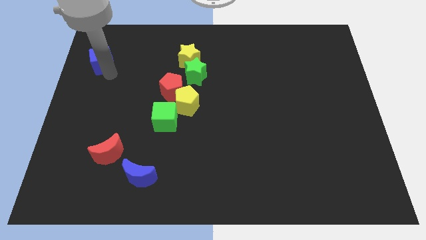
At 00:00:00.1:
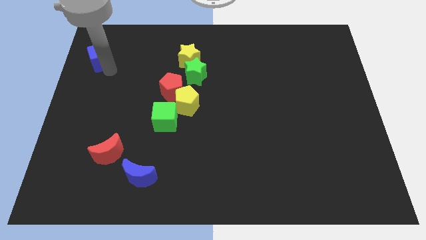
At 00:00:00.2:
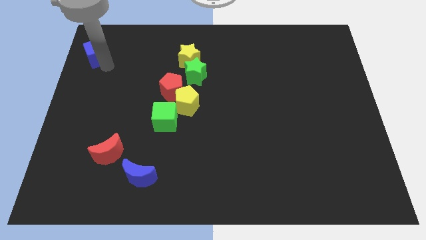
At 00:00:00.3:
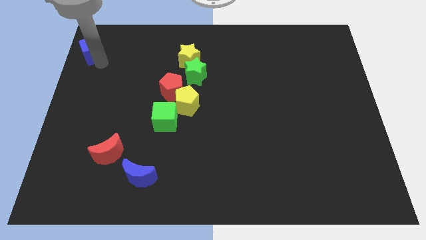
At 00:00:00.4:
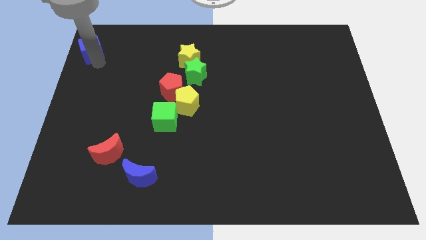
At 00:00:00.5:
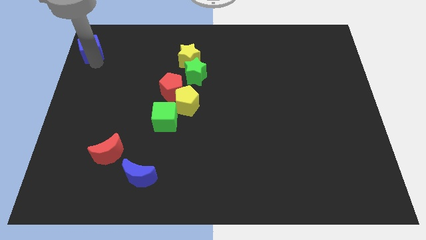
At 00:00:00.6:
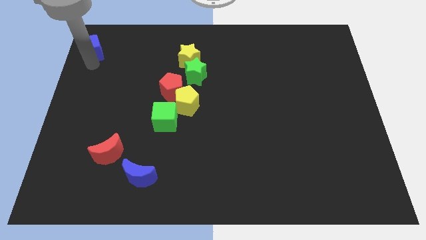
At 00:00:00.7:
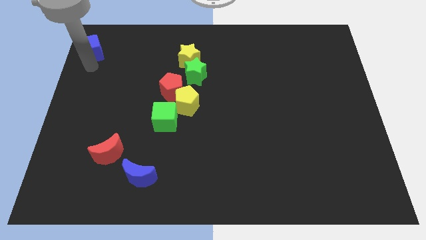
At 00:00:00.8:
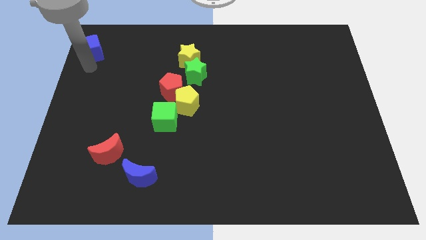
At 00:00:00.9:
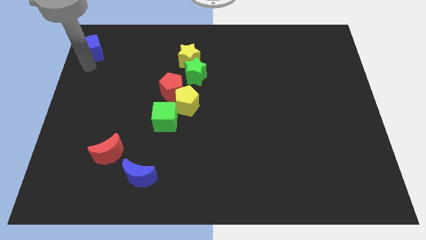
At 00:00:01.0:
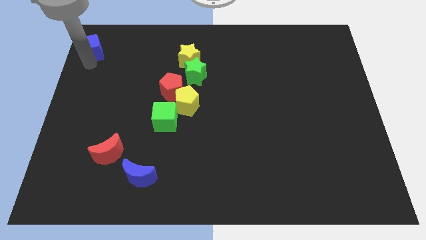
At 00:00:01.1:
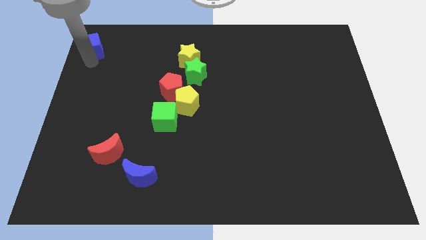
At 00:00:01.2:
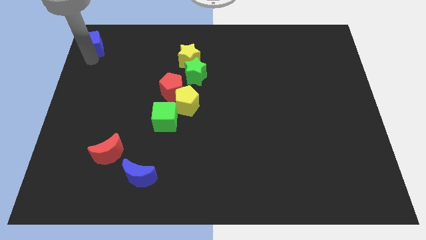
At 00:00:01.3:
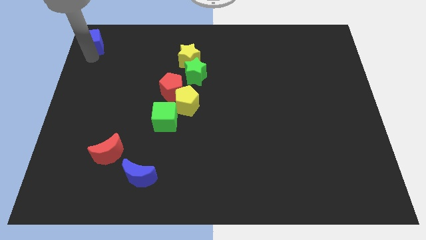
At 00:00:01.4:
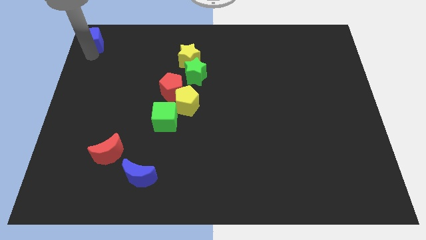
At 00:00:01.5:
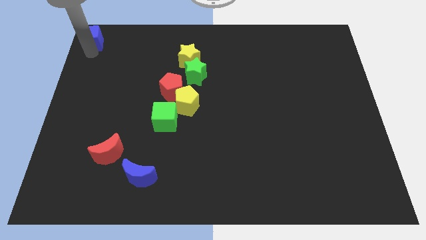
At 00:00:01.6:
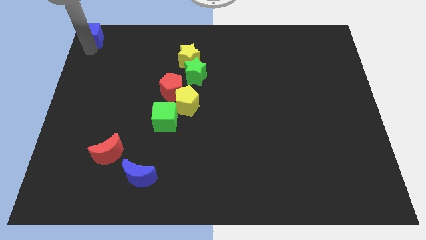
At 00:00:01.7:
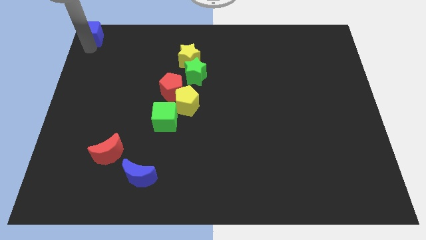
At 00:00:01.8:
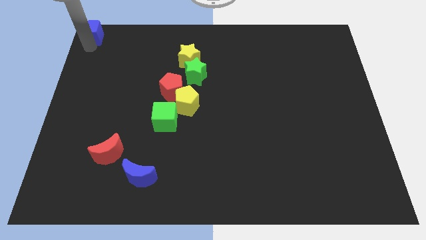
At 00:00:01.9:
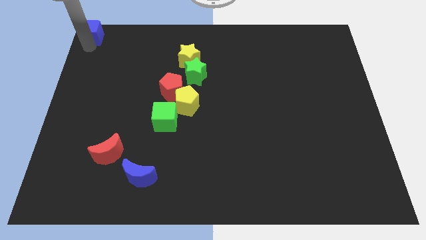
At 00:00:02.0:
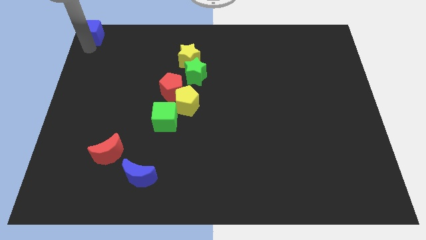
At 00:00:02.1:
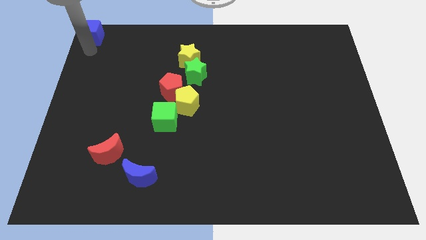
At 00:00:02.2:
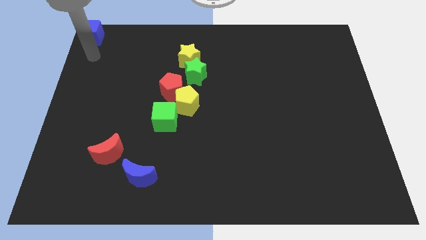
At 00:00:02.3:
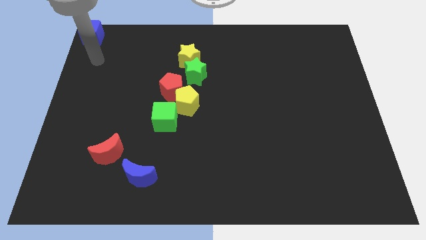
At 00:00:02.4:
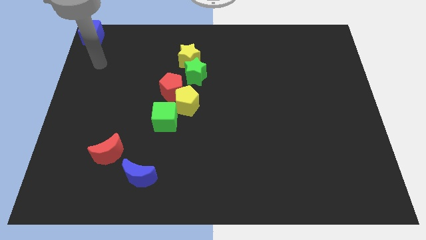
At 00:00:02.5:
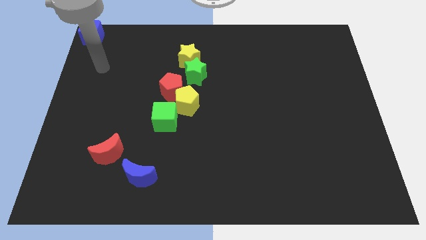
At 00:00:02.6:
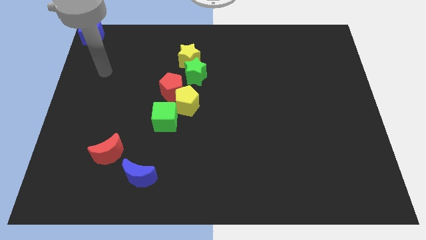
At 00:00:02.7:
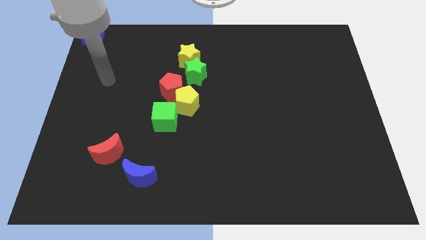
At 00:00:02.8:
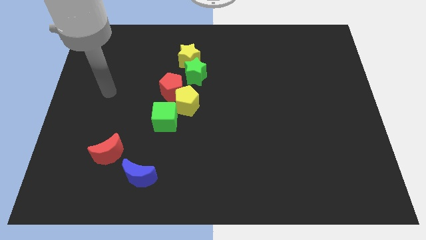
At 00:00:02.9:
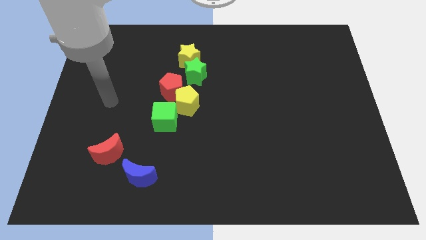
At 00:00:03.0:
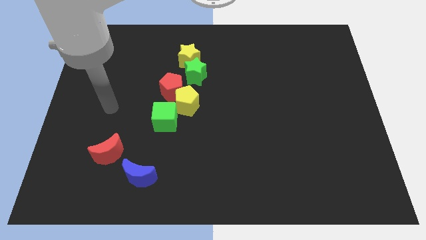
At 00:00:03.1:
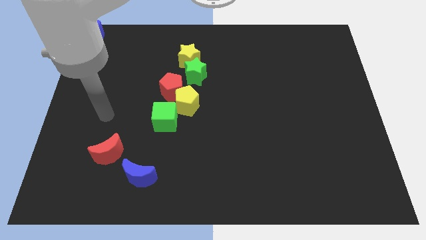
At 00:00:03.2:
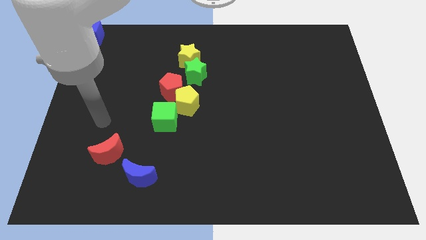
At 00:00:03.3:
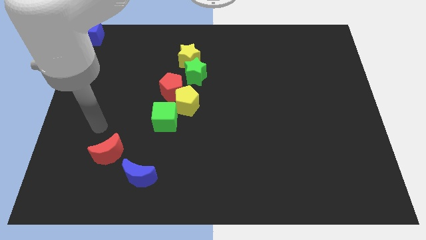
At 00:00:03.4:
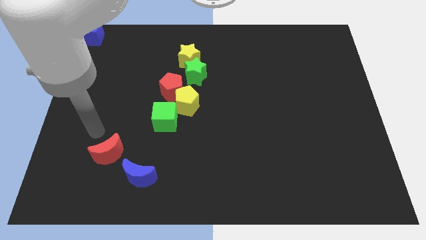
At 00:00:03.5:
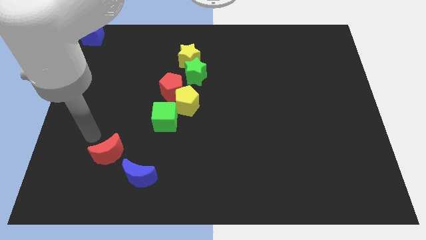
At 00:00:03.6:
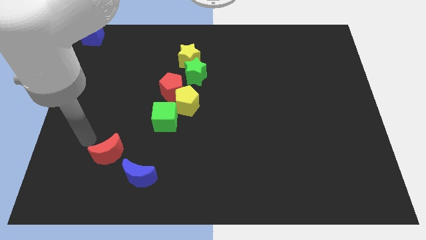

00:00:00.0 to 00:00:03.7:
move your arm towards the top left side of the red crescent

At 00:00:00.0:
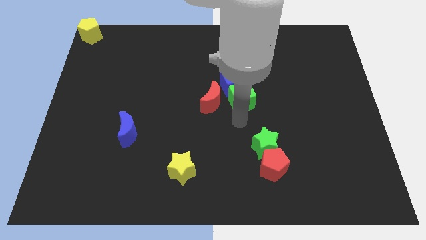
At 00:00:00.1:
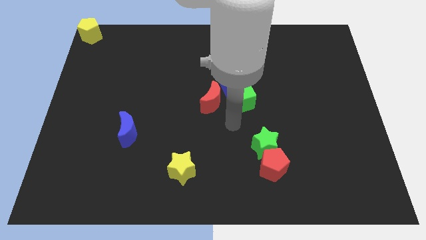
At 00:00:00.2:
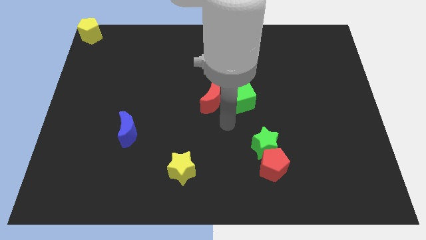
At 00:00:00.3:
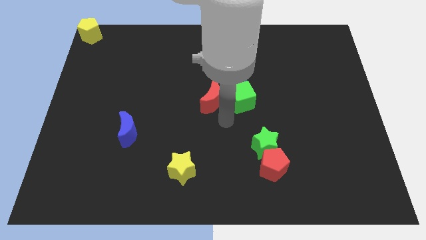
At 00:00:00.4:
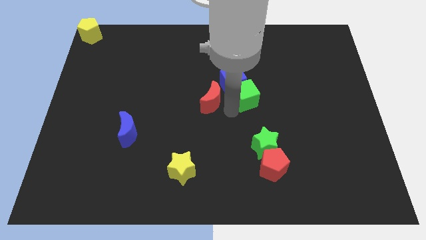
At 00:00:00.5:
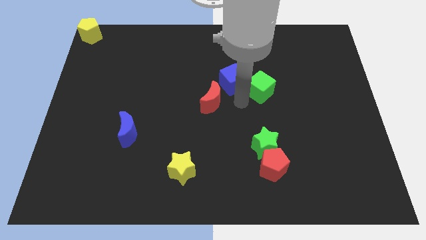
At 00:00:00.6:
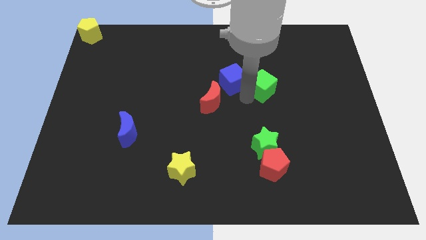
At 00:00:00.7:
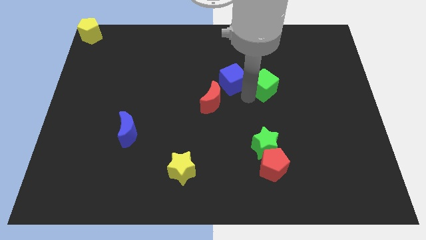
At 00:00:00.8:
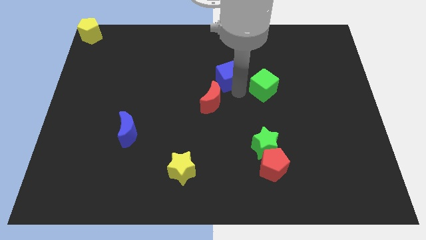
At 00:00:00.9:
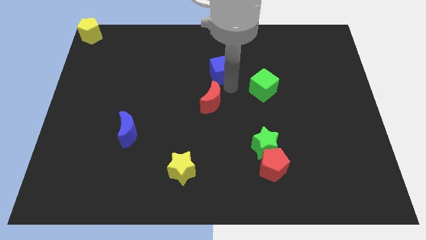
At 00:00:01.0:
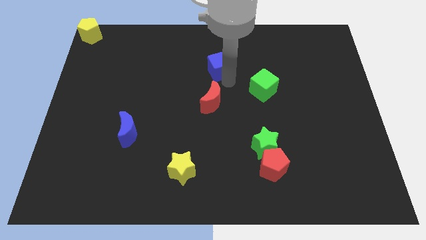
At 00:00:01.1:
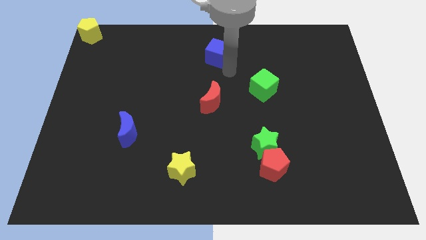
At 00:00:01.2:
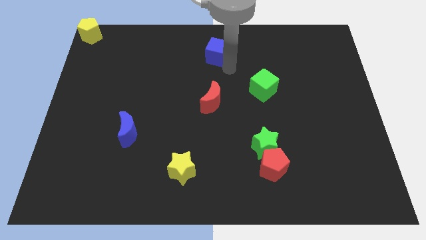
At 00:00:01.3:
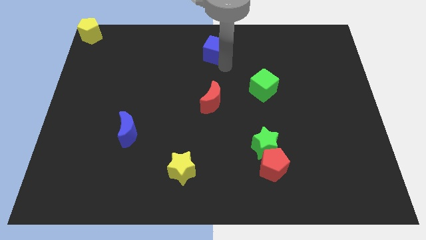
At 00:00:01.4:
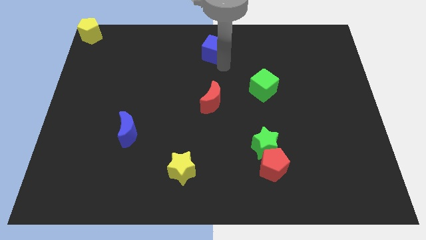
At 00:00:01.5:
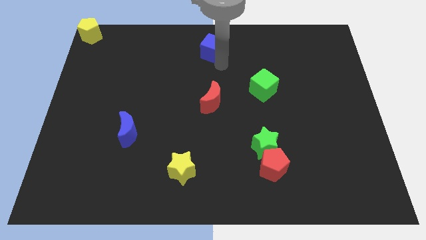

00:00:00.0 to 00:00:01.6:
separate the blue cube and green cube

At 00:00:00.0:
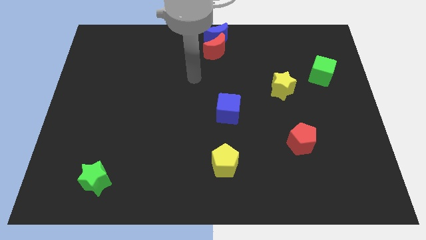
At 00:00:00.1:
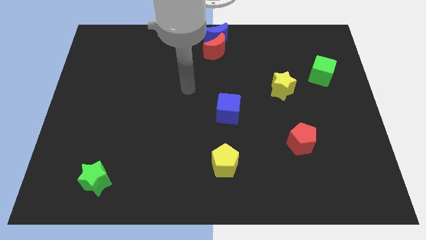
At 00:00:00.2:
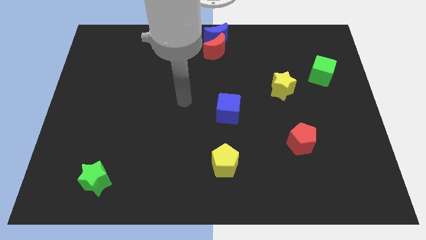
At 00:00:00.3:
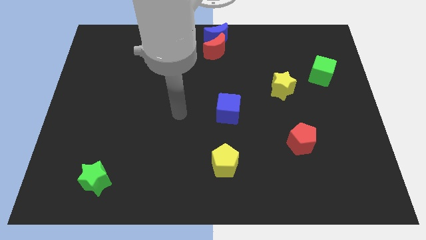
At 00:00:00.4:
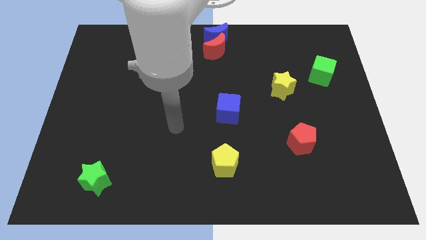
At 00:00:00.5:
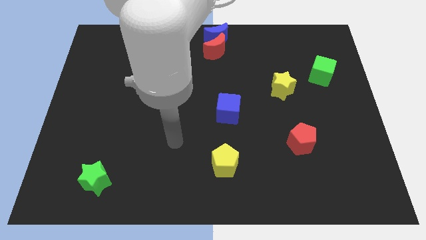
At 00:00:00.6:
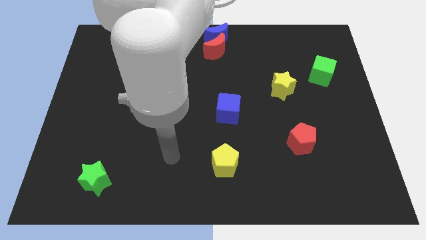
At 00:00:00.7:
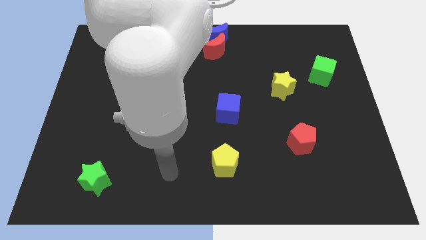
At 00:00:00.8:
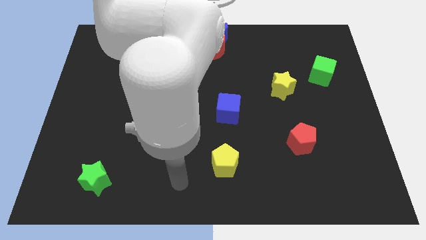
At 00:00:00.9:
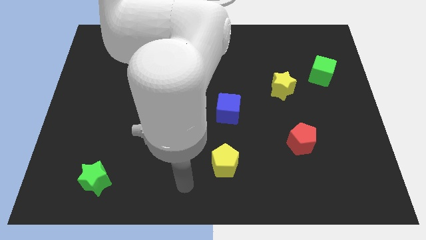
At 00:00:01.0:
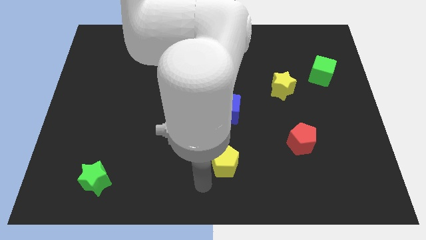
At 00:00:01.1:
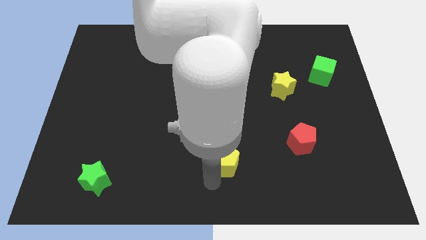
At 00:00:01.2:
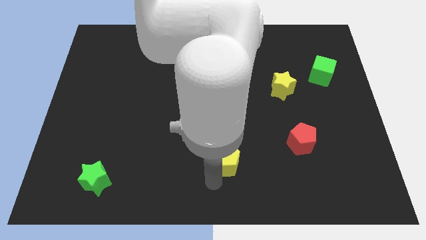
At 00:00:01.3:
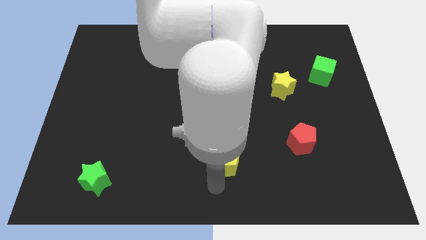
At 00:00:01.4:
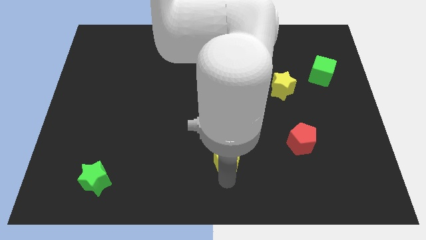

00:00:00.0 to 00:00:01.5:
place your hand vertically below the yellow pentagon

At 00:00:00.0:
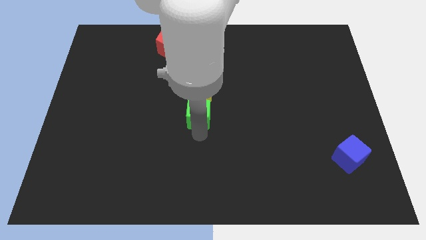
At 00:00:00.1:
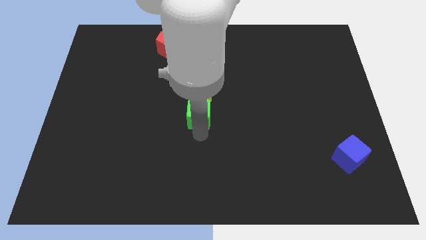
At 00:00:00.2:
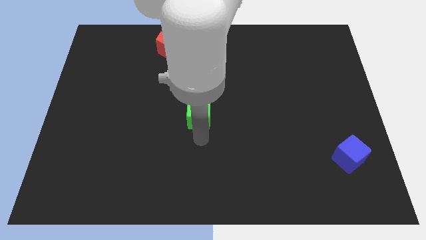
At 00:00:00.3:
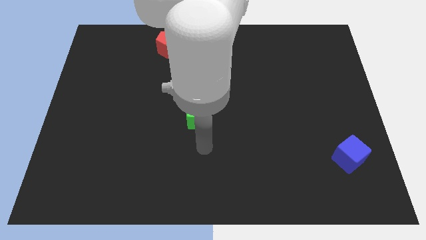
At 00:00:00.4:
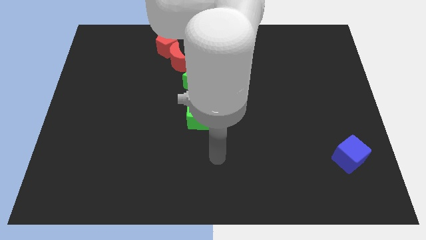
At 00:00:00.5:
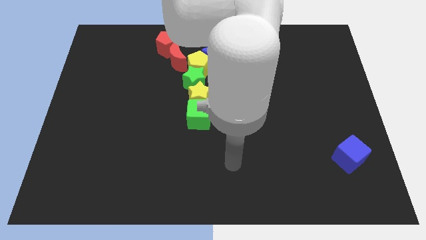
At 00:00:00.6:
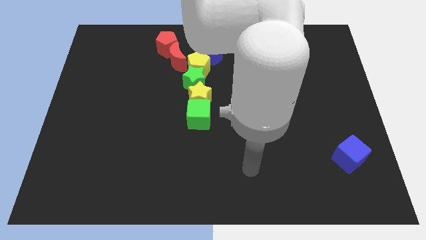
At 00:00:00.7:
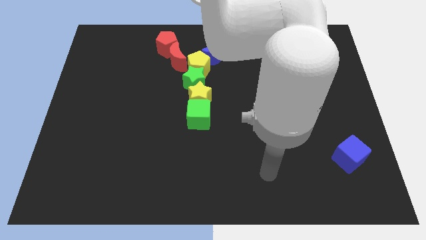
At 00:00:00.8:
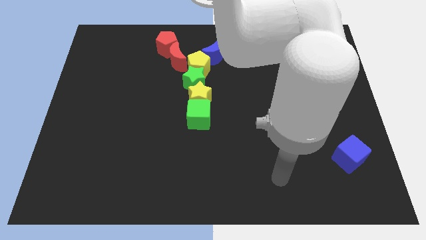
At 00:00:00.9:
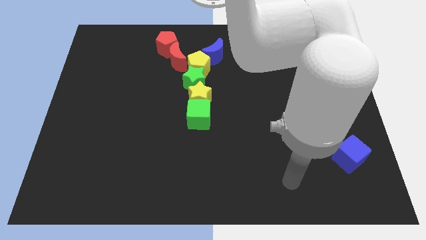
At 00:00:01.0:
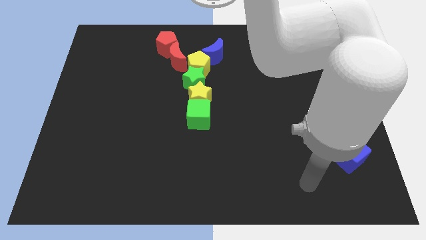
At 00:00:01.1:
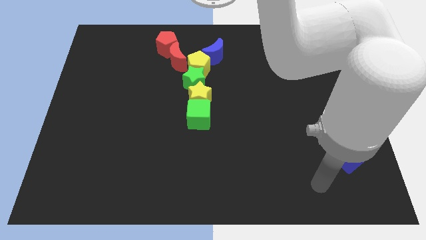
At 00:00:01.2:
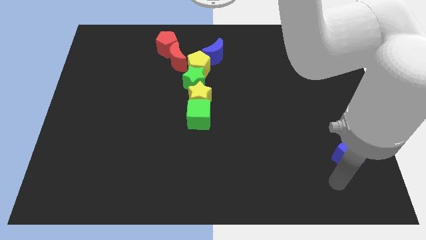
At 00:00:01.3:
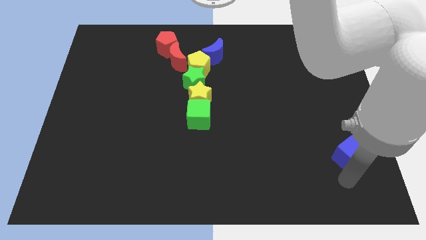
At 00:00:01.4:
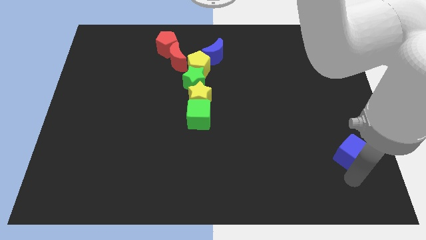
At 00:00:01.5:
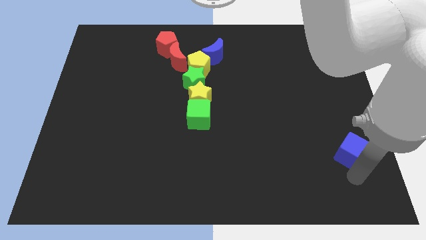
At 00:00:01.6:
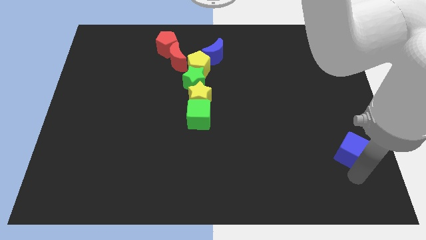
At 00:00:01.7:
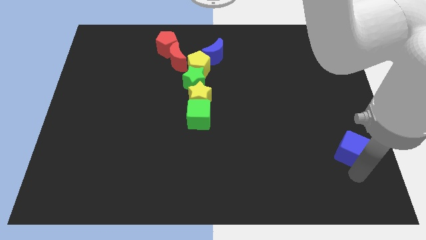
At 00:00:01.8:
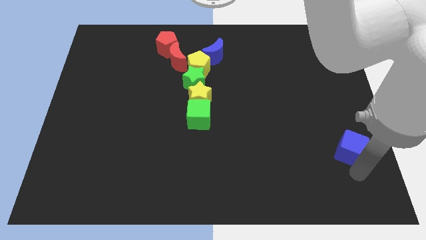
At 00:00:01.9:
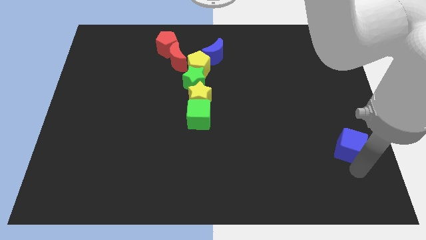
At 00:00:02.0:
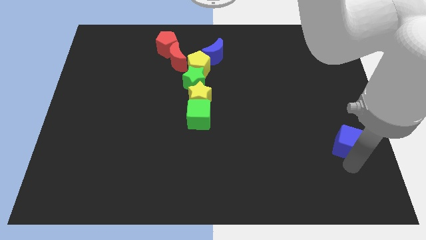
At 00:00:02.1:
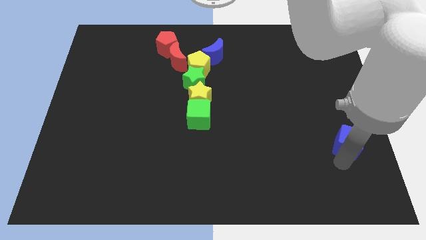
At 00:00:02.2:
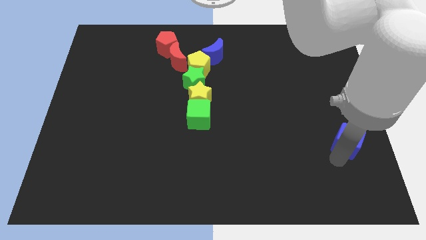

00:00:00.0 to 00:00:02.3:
move the arm towards the blue cube
